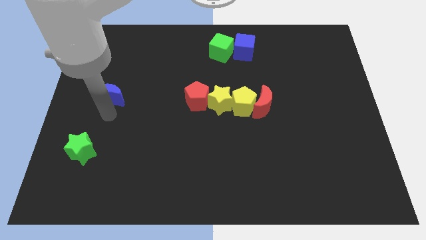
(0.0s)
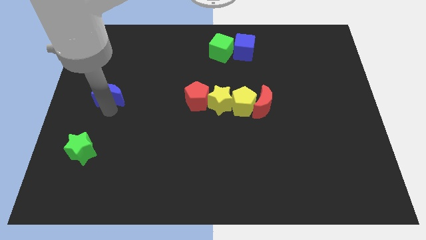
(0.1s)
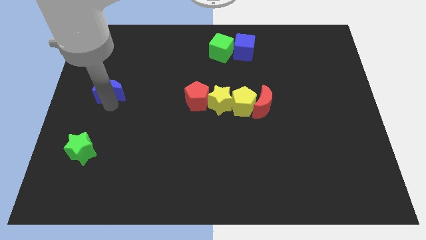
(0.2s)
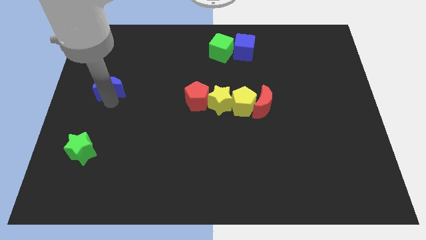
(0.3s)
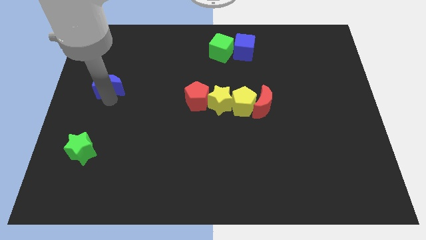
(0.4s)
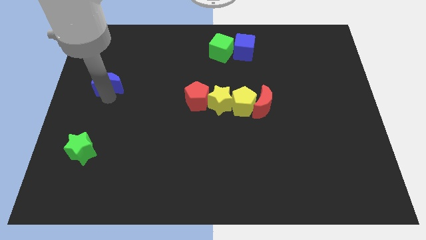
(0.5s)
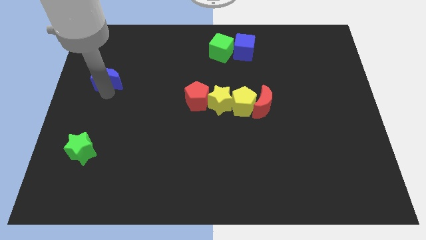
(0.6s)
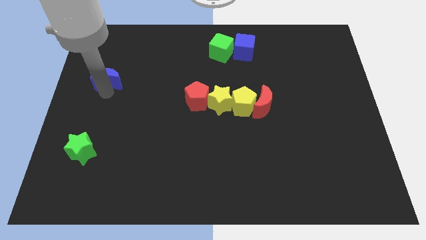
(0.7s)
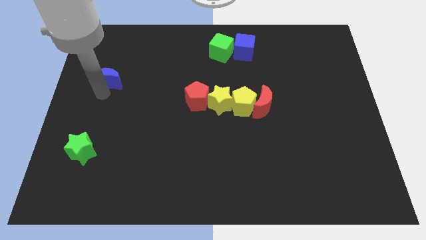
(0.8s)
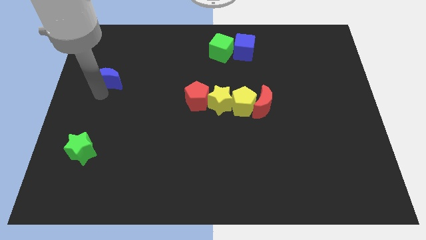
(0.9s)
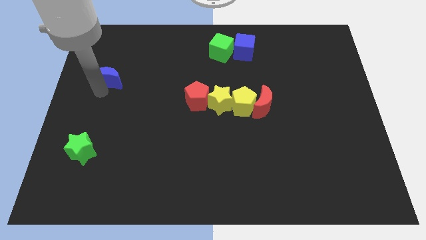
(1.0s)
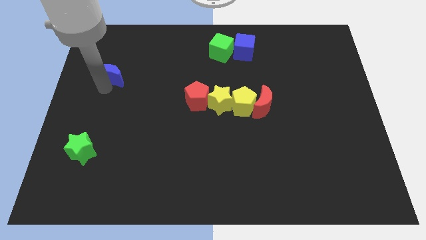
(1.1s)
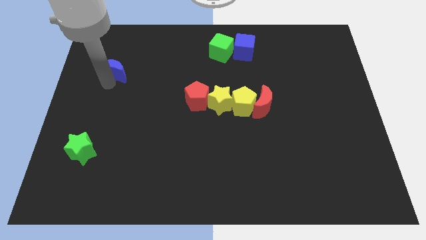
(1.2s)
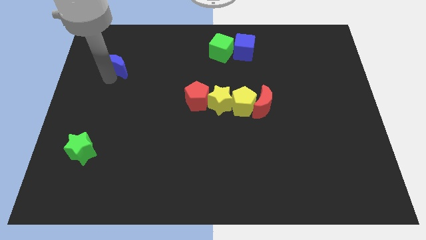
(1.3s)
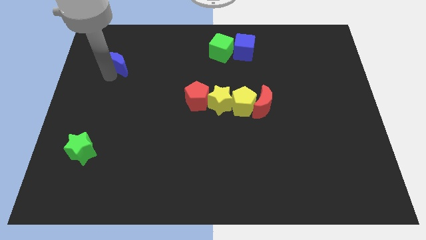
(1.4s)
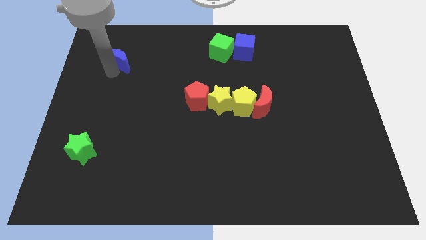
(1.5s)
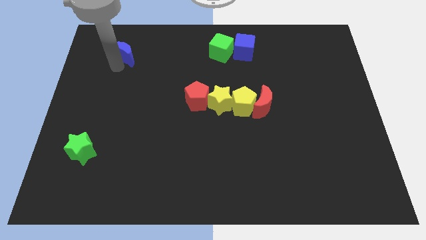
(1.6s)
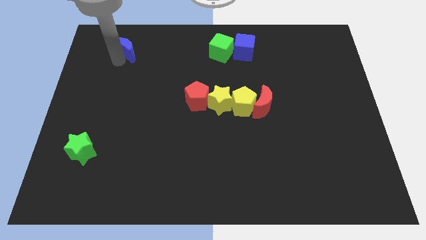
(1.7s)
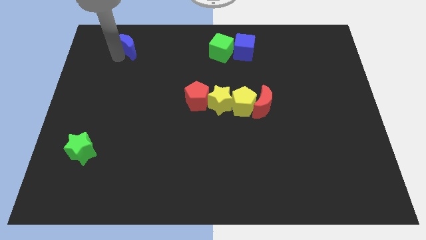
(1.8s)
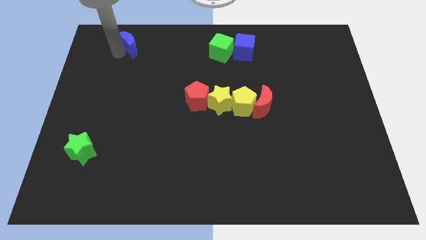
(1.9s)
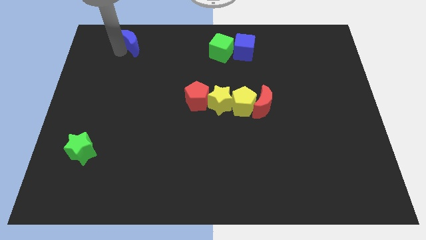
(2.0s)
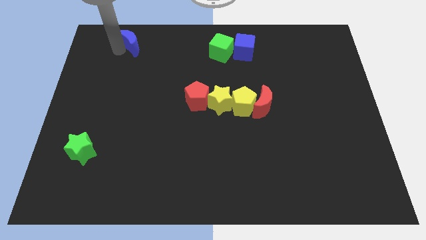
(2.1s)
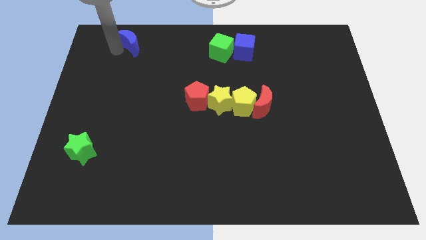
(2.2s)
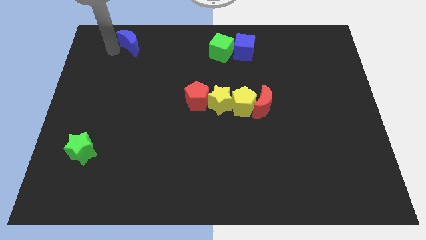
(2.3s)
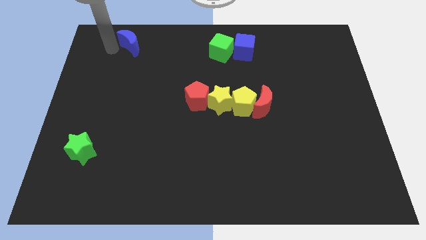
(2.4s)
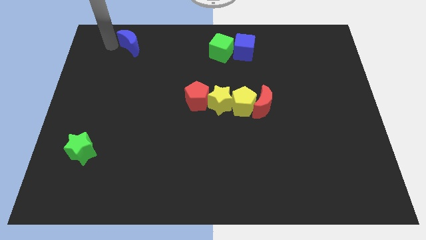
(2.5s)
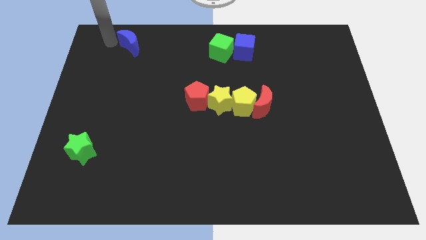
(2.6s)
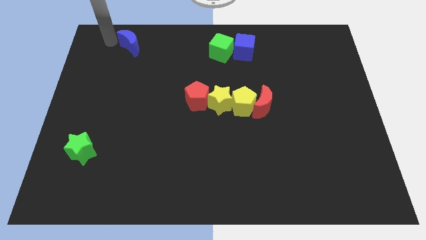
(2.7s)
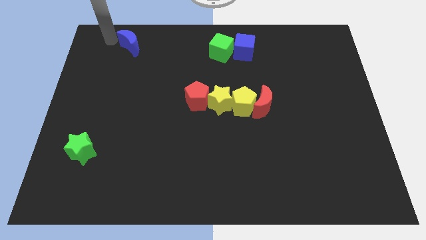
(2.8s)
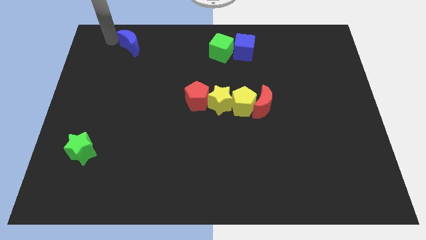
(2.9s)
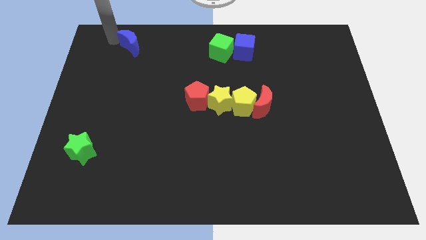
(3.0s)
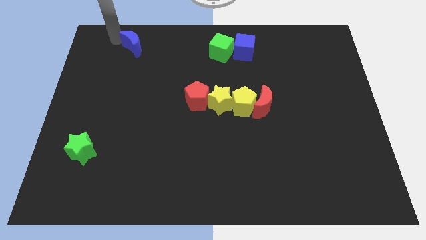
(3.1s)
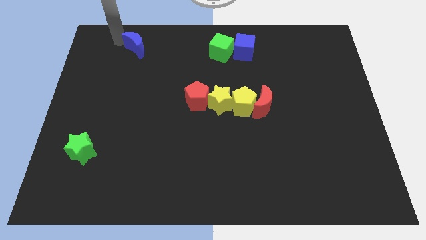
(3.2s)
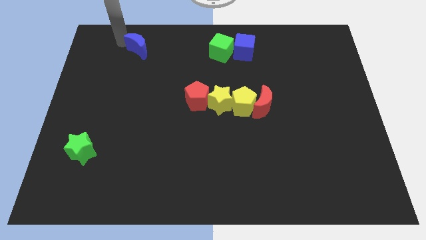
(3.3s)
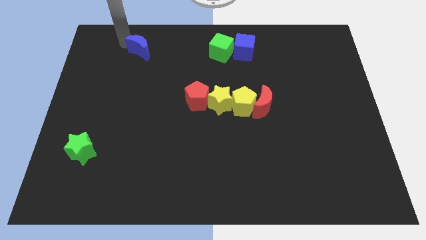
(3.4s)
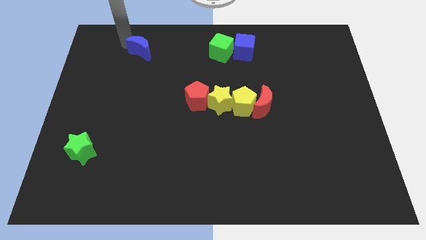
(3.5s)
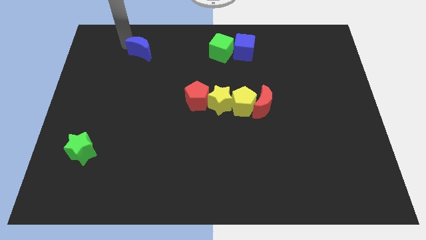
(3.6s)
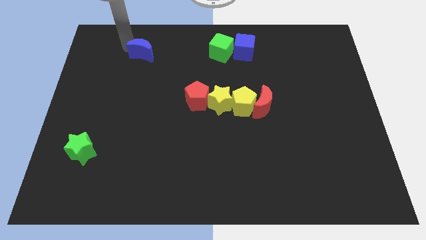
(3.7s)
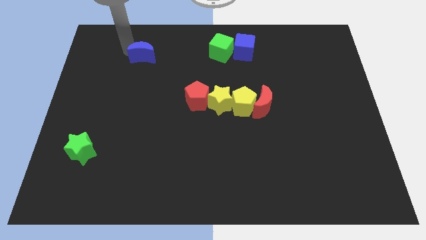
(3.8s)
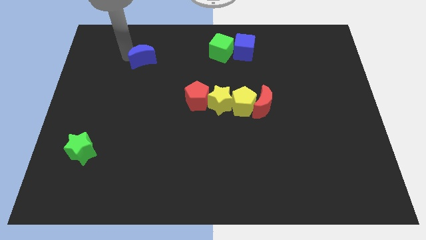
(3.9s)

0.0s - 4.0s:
move slightly blue cube

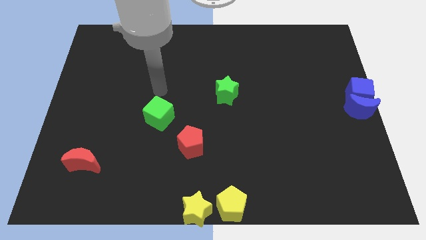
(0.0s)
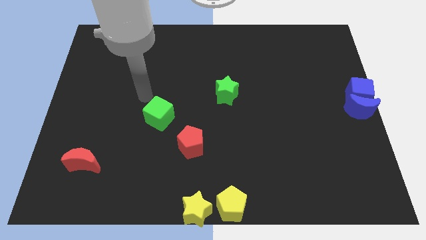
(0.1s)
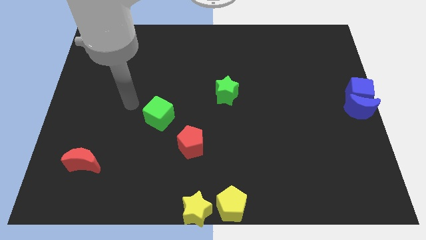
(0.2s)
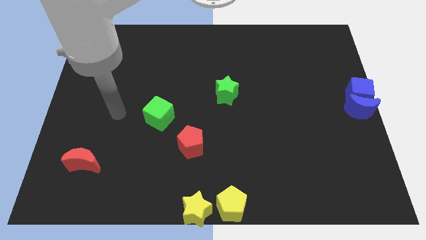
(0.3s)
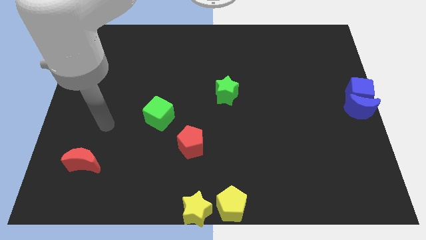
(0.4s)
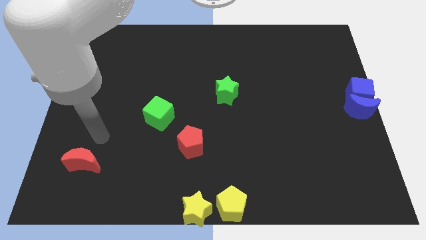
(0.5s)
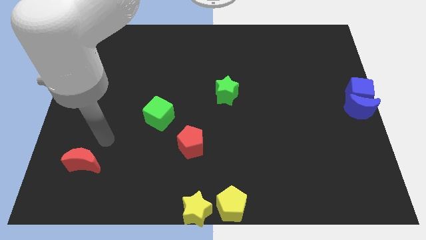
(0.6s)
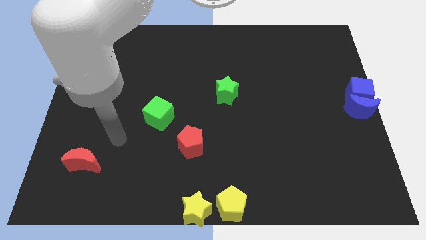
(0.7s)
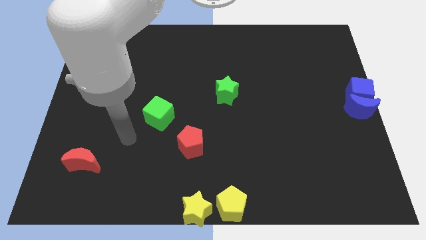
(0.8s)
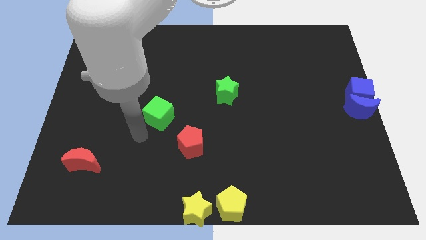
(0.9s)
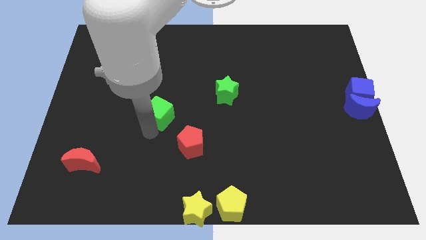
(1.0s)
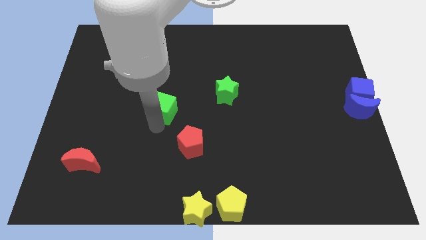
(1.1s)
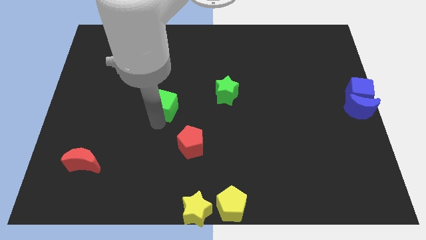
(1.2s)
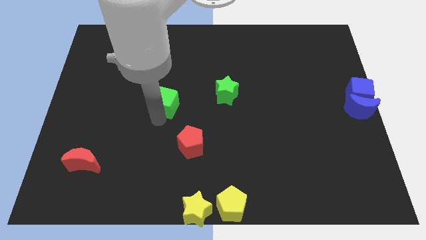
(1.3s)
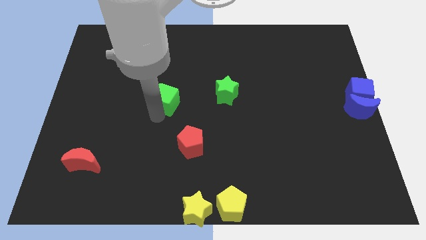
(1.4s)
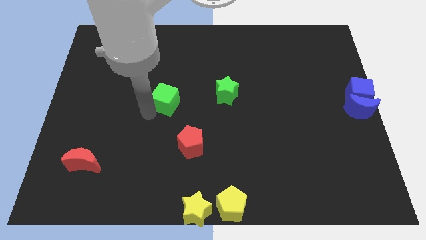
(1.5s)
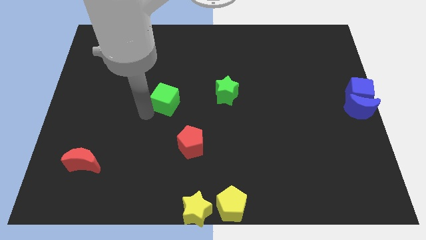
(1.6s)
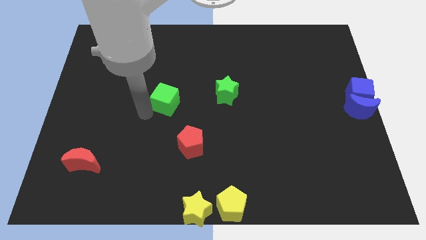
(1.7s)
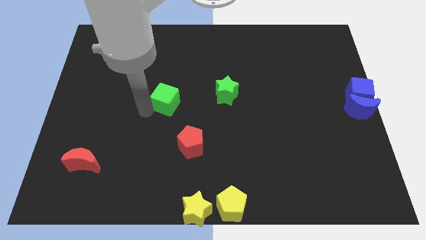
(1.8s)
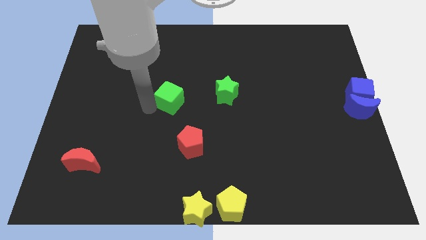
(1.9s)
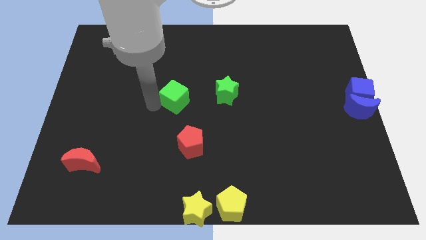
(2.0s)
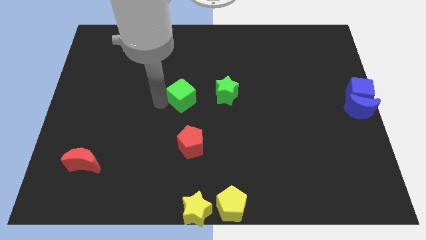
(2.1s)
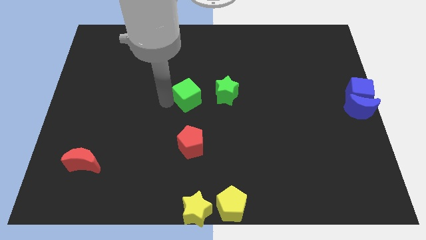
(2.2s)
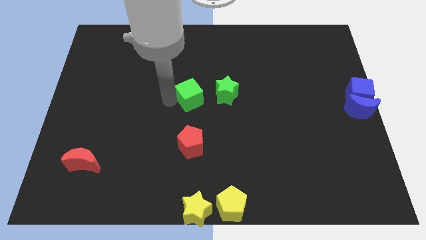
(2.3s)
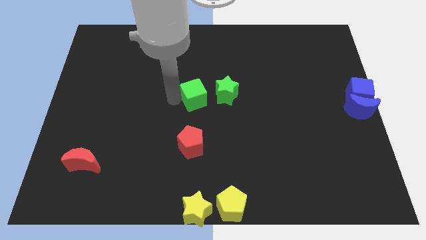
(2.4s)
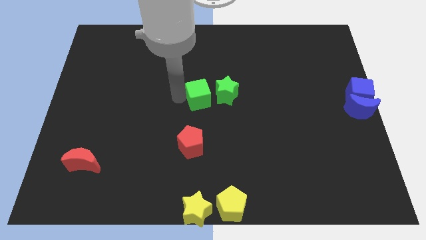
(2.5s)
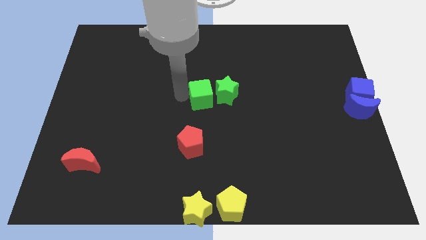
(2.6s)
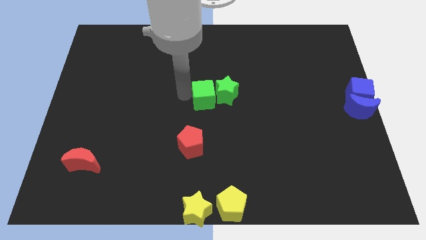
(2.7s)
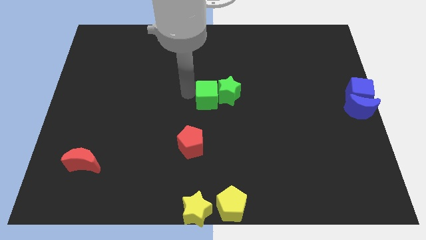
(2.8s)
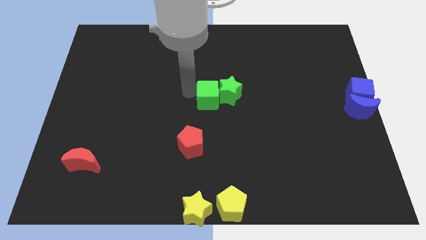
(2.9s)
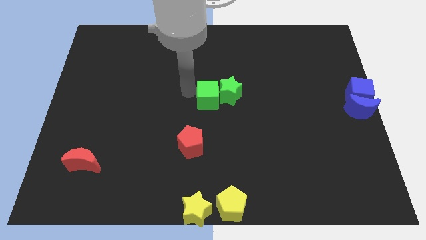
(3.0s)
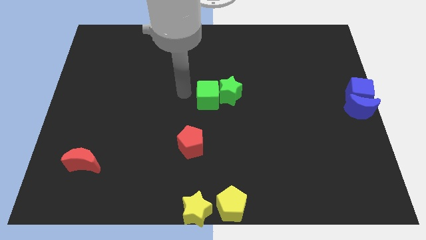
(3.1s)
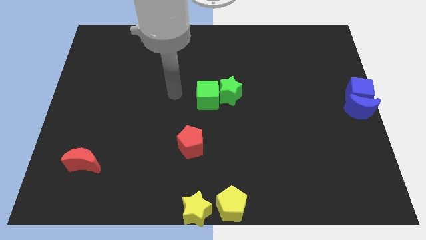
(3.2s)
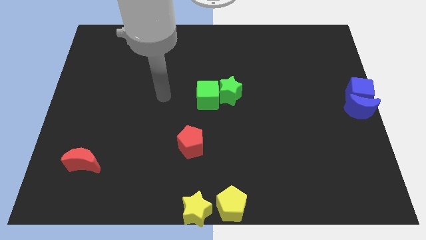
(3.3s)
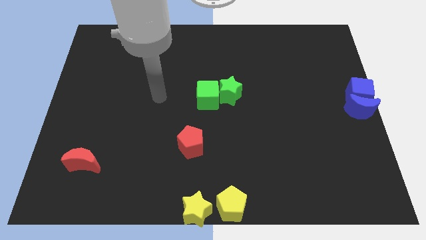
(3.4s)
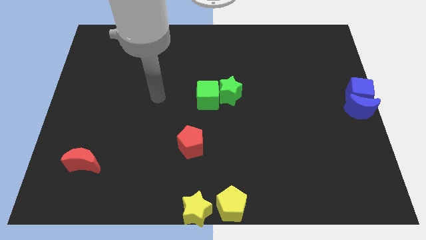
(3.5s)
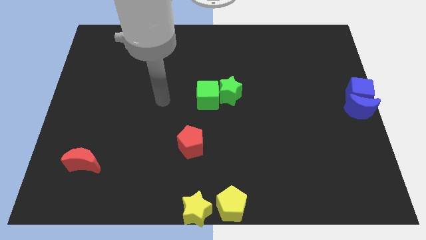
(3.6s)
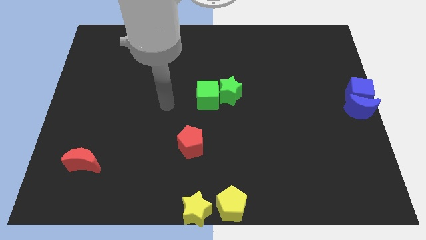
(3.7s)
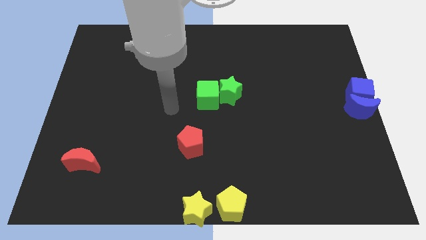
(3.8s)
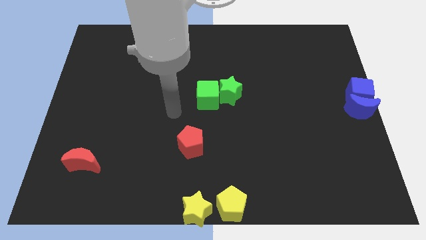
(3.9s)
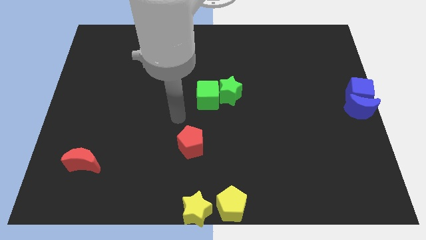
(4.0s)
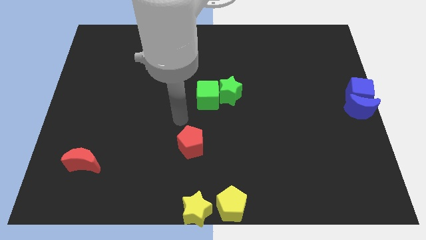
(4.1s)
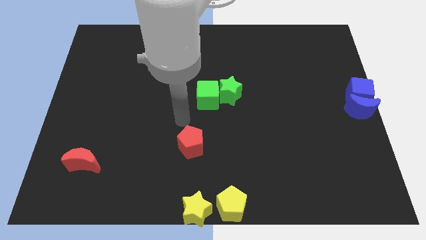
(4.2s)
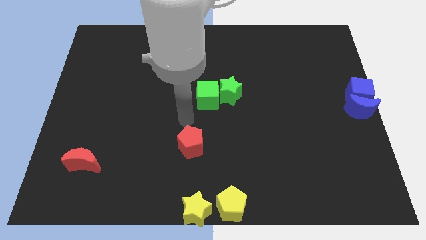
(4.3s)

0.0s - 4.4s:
move green cube into green star

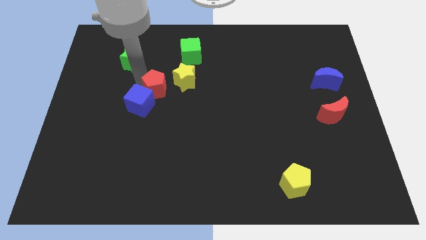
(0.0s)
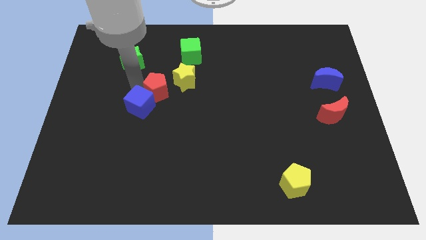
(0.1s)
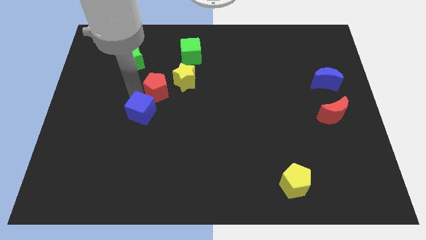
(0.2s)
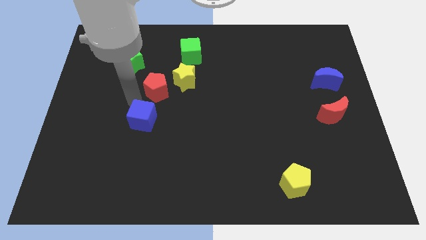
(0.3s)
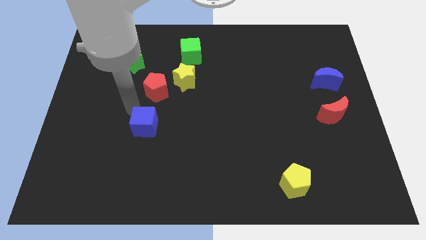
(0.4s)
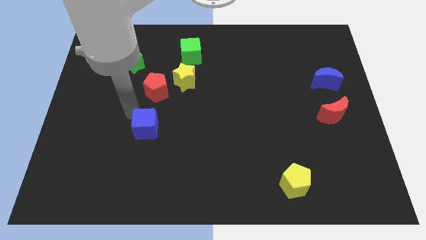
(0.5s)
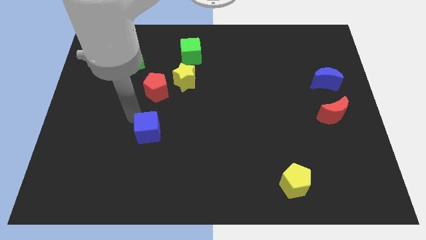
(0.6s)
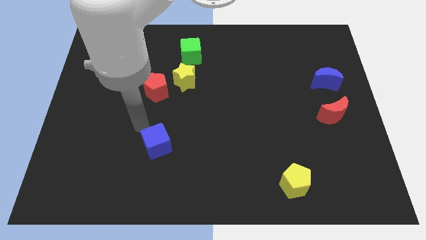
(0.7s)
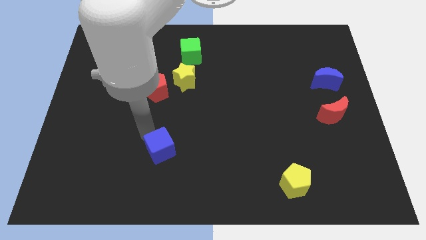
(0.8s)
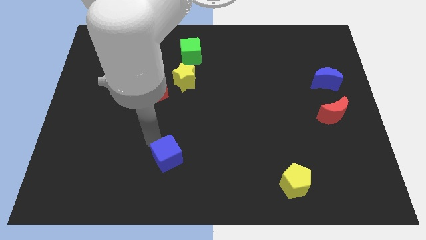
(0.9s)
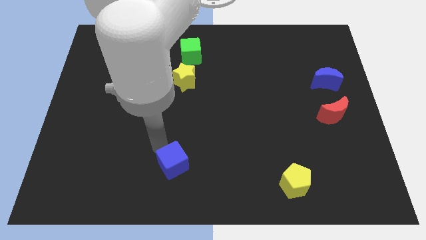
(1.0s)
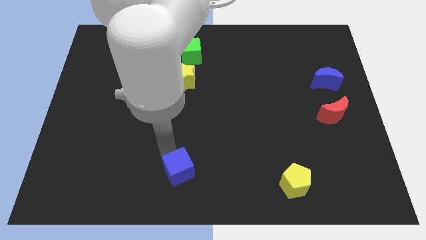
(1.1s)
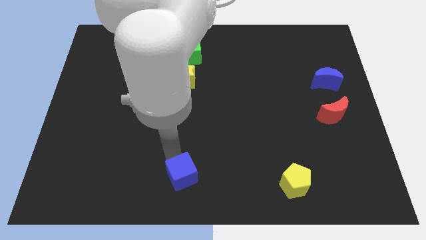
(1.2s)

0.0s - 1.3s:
move the blue cube to the bottom of the yellow star
